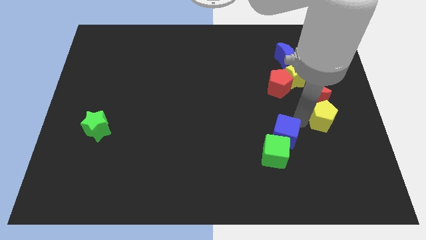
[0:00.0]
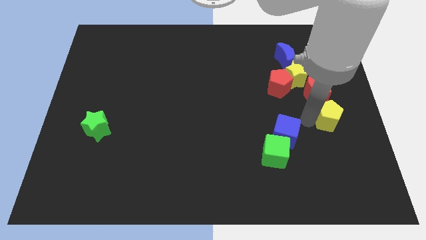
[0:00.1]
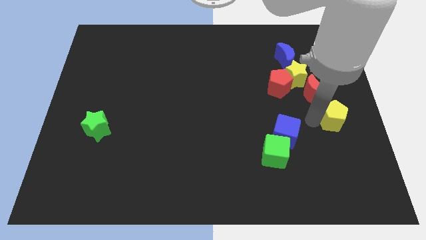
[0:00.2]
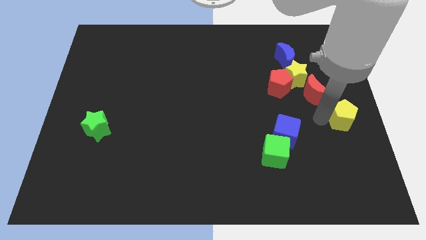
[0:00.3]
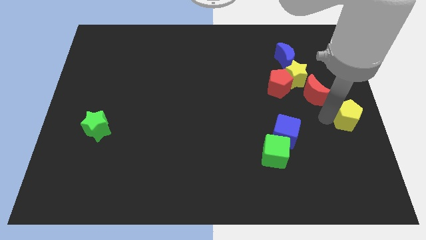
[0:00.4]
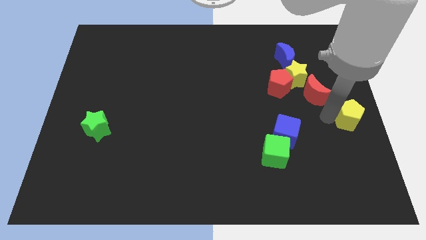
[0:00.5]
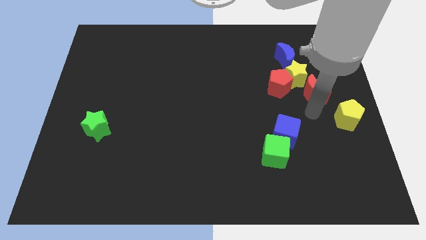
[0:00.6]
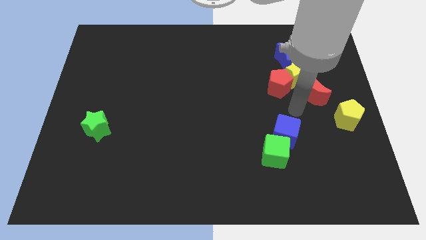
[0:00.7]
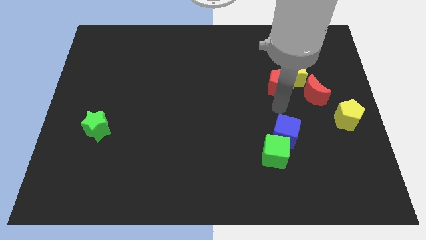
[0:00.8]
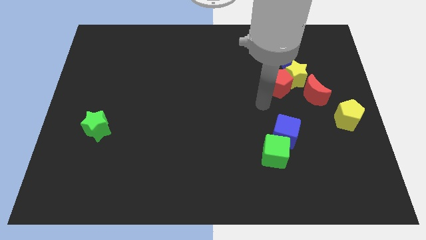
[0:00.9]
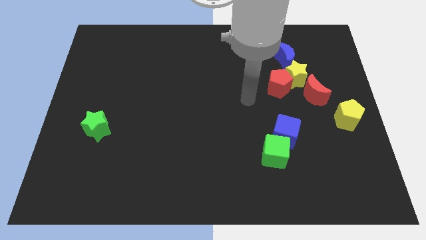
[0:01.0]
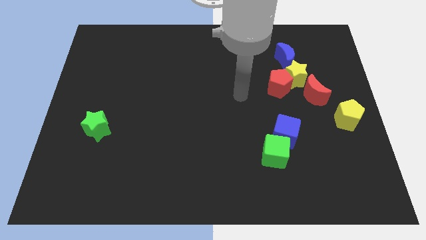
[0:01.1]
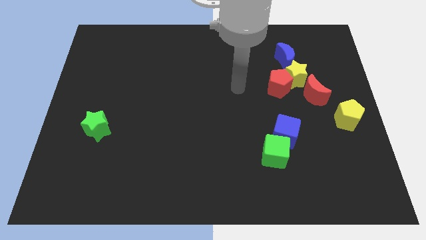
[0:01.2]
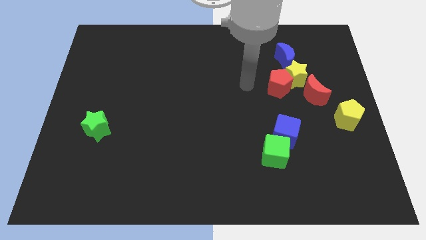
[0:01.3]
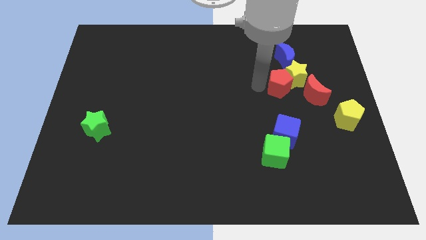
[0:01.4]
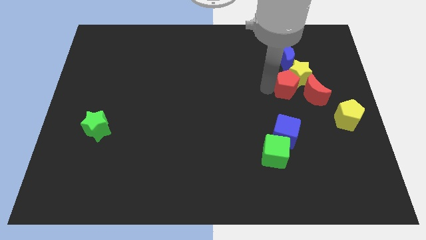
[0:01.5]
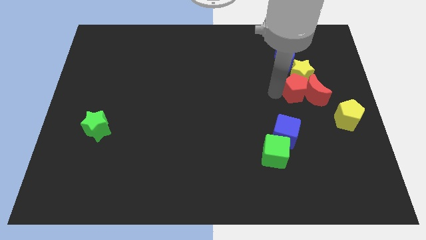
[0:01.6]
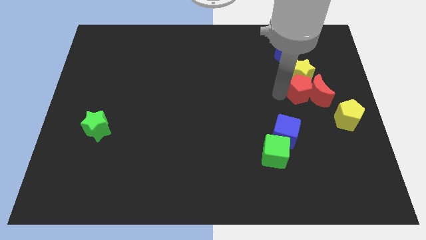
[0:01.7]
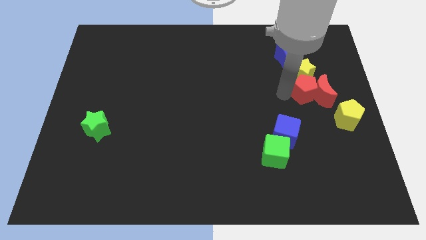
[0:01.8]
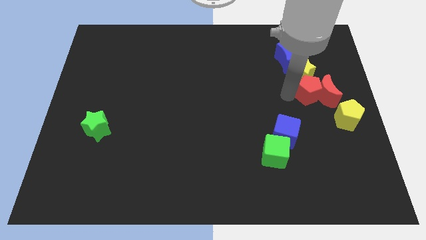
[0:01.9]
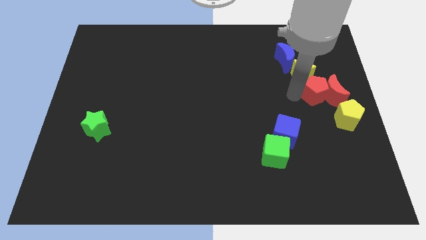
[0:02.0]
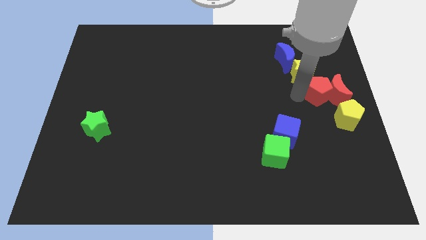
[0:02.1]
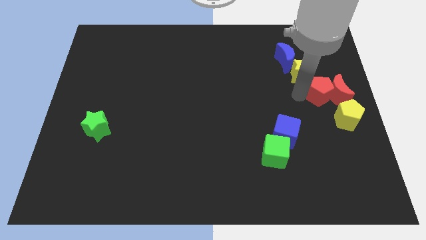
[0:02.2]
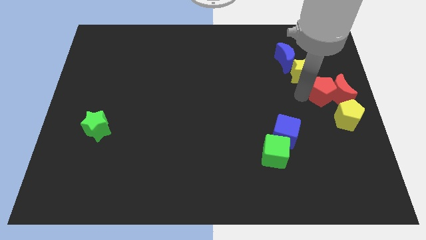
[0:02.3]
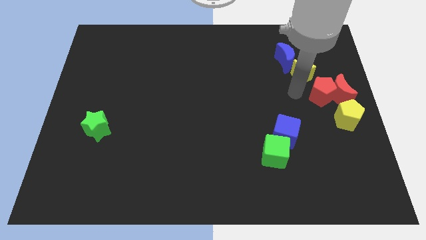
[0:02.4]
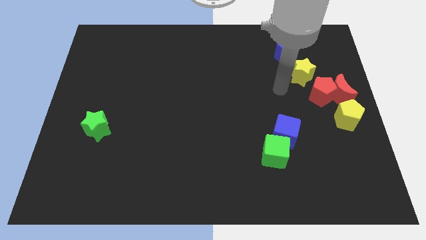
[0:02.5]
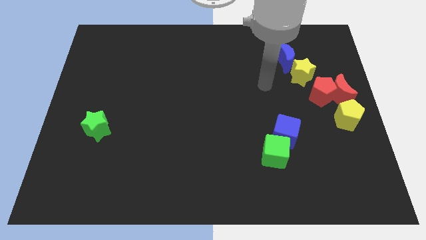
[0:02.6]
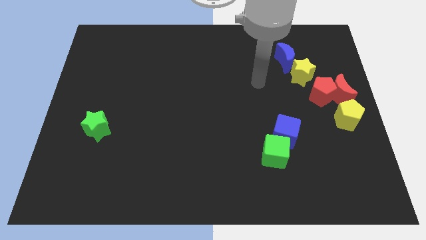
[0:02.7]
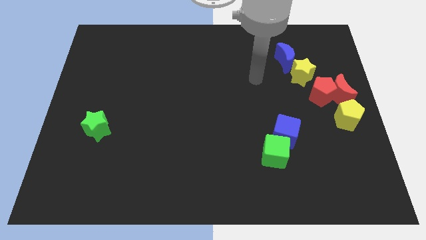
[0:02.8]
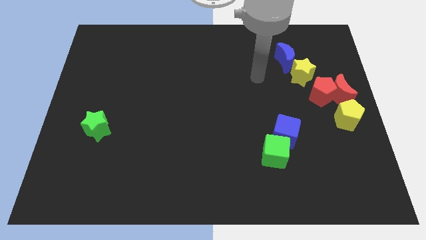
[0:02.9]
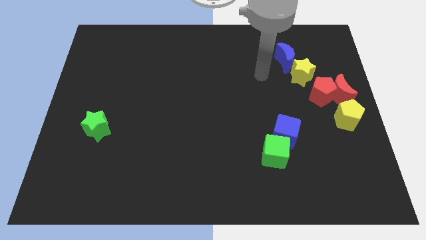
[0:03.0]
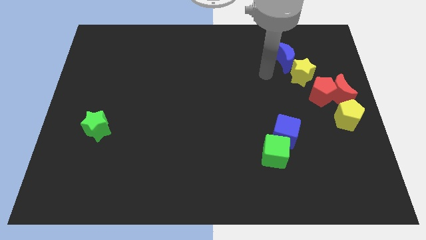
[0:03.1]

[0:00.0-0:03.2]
move the yellow pentagon and red blocks to the center right

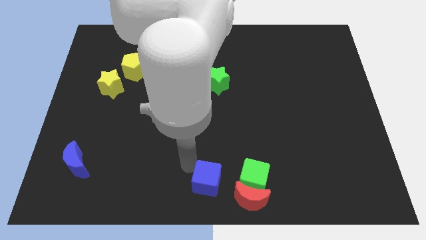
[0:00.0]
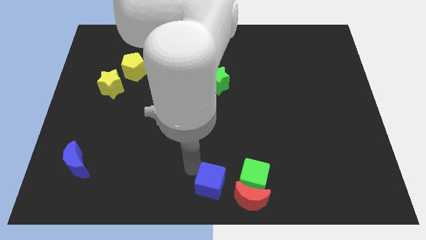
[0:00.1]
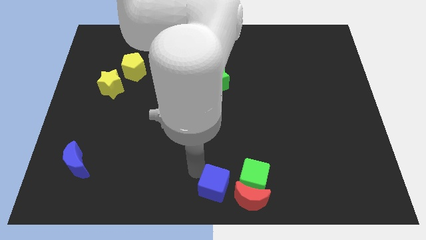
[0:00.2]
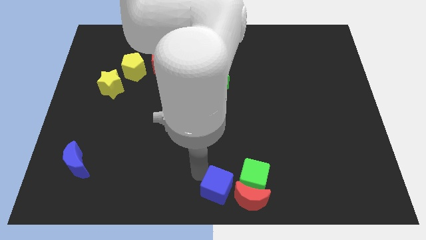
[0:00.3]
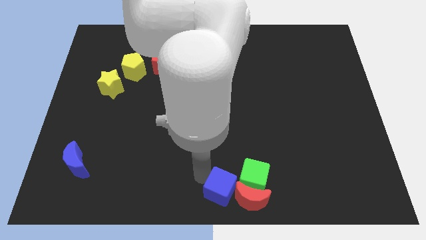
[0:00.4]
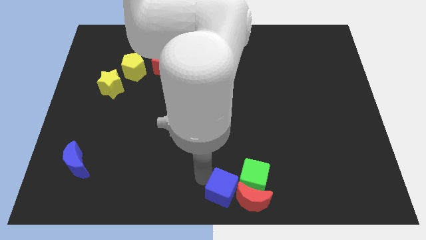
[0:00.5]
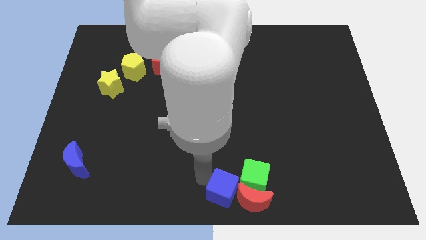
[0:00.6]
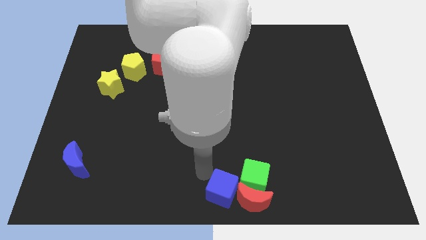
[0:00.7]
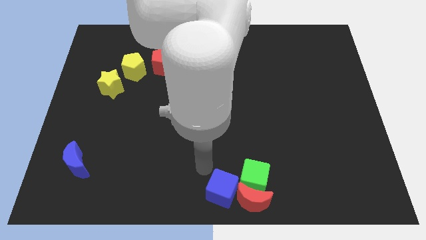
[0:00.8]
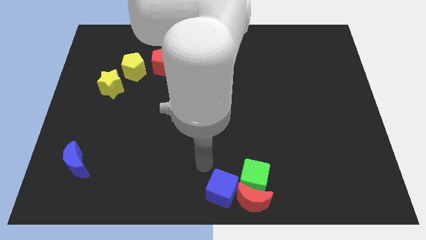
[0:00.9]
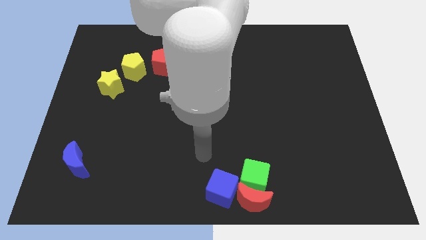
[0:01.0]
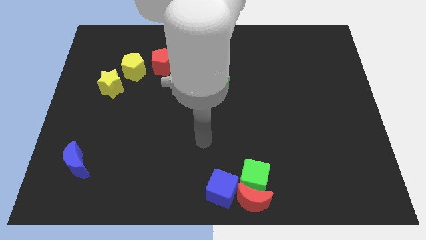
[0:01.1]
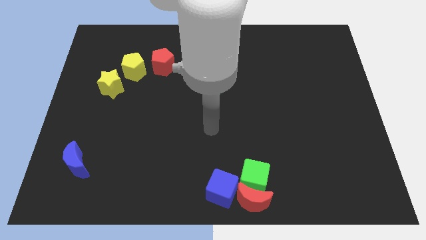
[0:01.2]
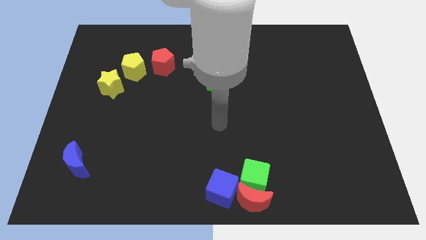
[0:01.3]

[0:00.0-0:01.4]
push the blue block into the red and green block

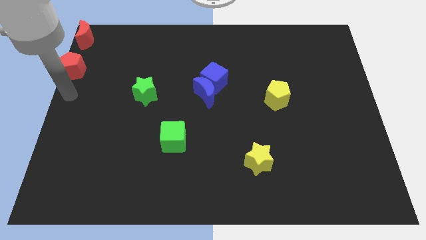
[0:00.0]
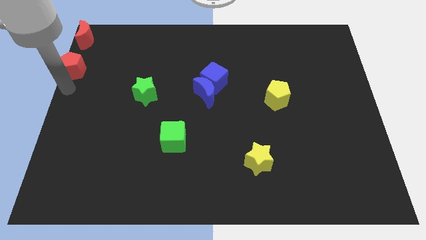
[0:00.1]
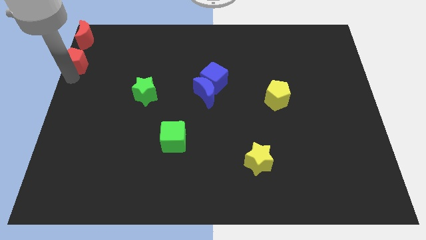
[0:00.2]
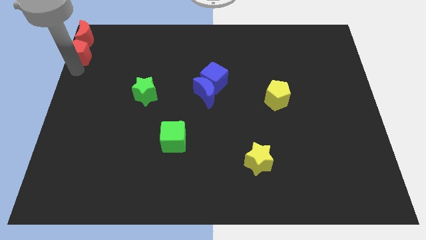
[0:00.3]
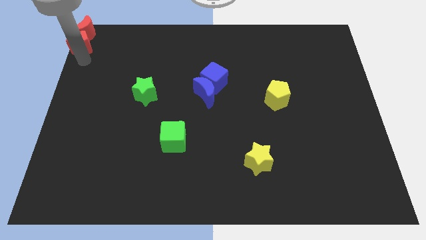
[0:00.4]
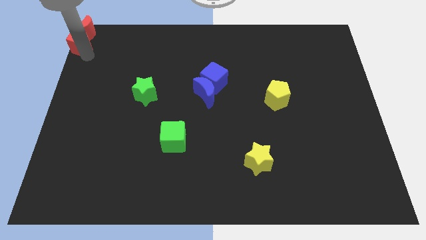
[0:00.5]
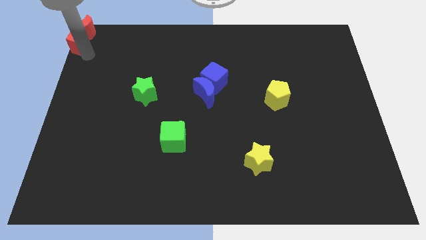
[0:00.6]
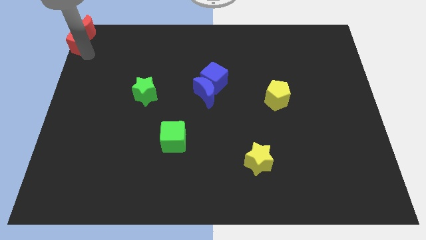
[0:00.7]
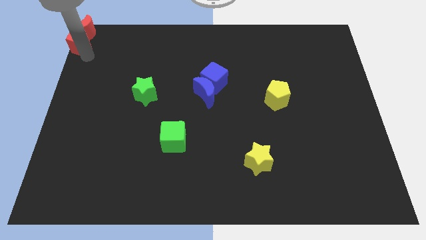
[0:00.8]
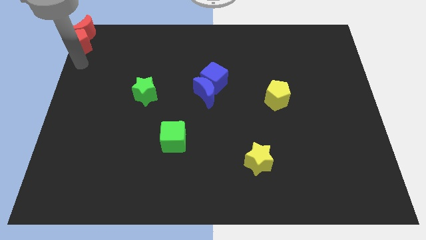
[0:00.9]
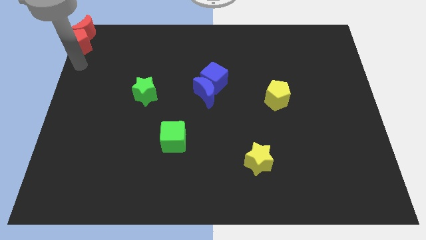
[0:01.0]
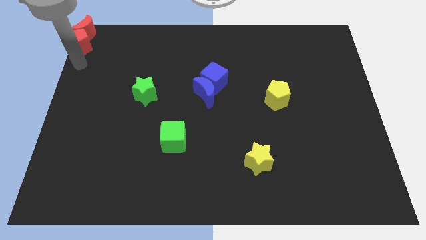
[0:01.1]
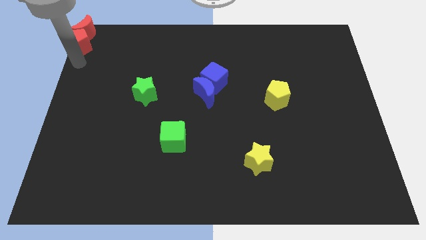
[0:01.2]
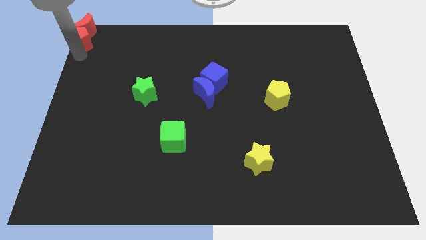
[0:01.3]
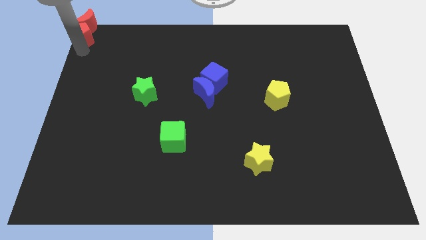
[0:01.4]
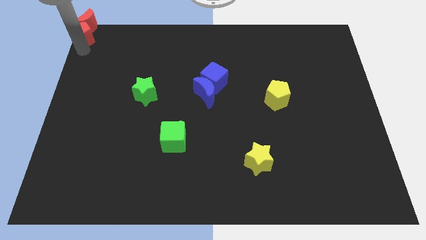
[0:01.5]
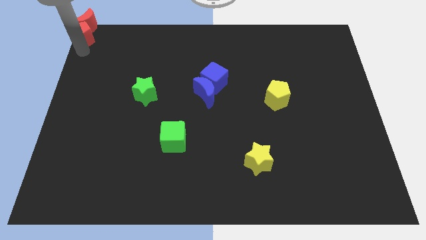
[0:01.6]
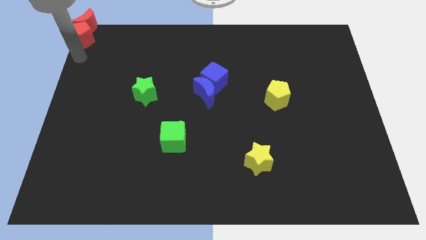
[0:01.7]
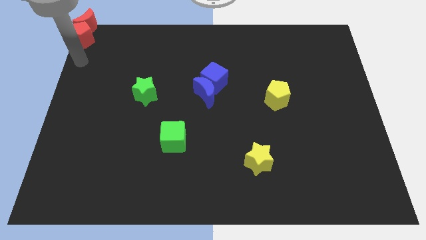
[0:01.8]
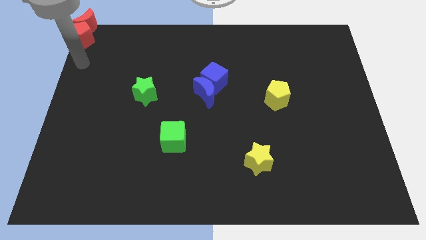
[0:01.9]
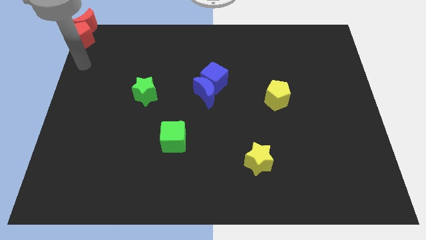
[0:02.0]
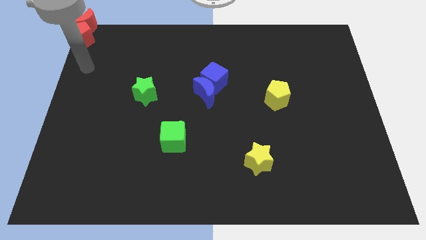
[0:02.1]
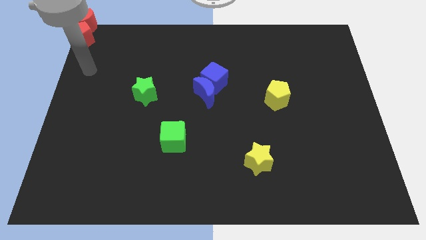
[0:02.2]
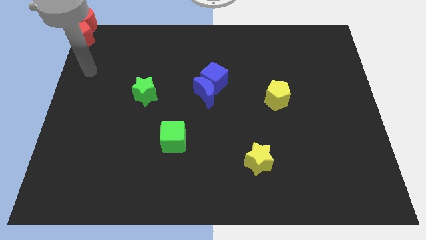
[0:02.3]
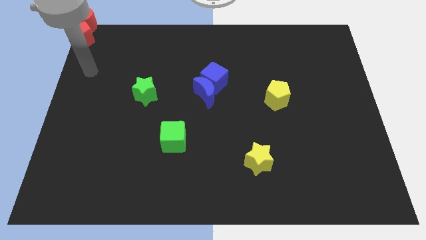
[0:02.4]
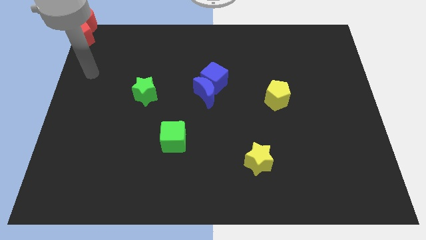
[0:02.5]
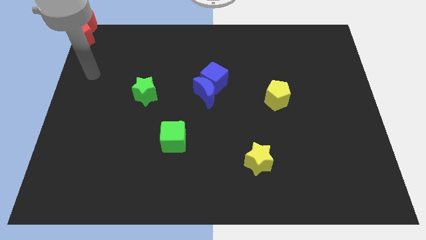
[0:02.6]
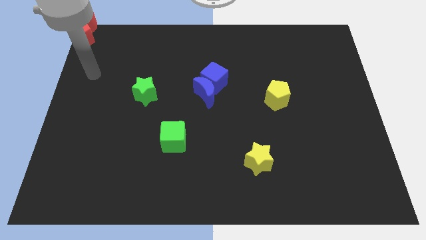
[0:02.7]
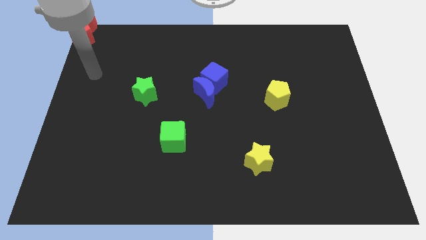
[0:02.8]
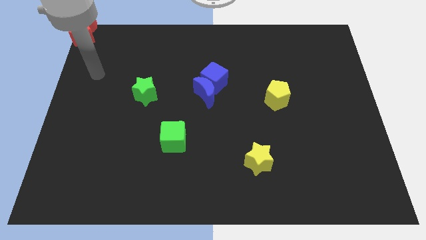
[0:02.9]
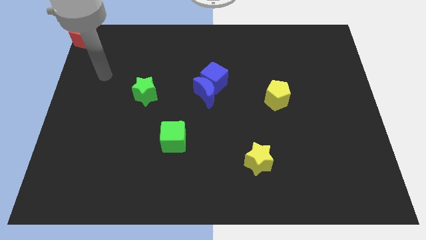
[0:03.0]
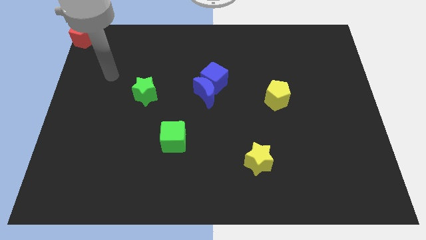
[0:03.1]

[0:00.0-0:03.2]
move the red pentagon into the red crescent

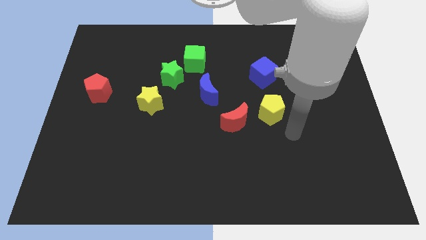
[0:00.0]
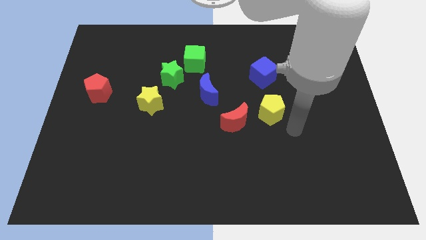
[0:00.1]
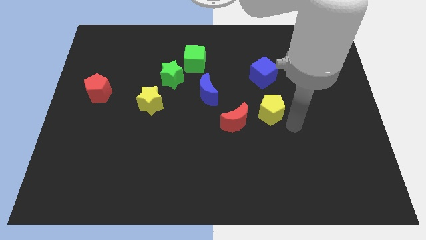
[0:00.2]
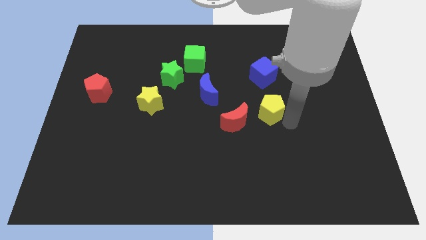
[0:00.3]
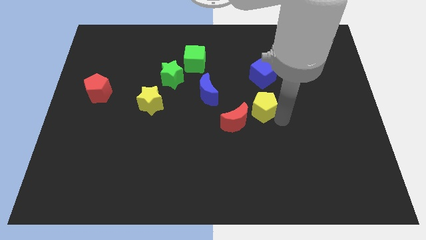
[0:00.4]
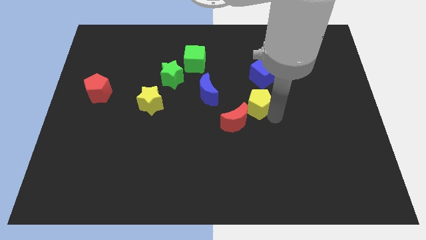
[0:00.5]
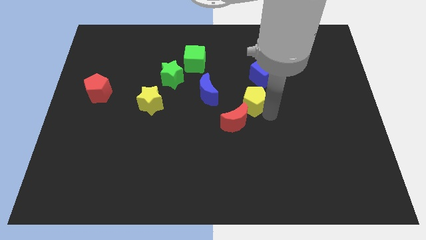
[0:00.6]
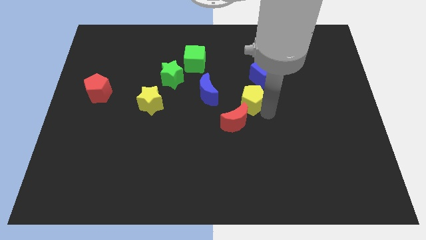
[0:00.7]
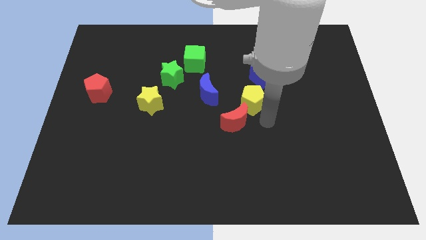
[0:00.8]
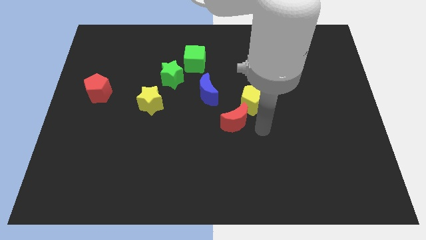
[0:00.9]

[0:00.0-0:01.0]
place the yellow pentagon diagonal to the blue cube

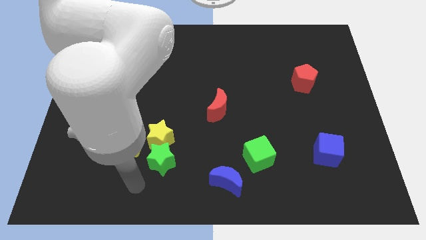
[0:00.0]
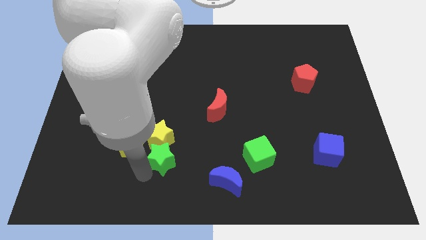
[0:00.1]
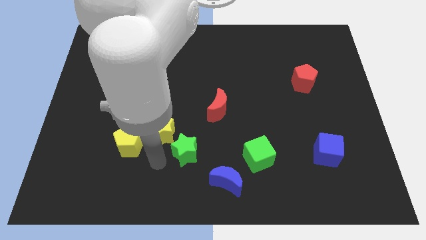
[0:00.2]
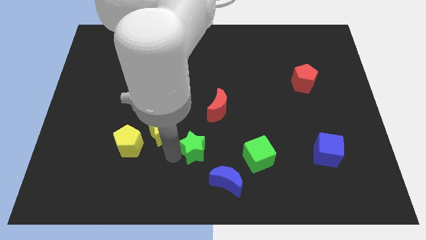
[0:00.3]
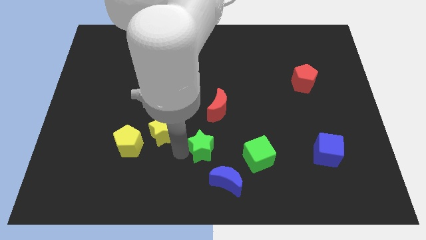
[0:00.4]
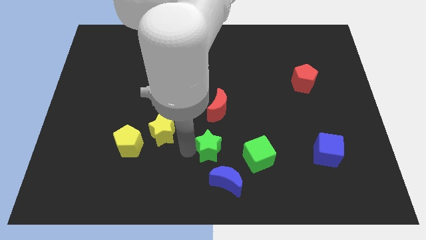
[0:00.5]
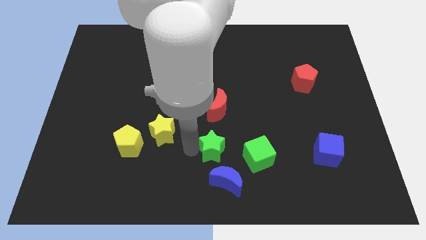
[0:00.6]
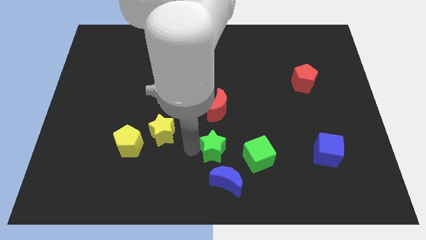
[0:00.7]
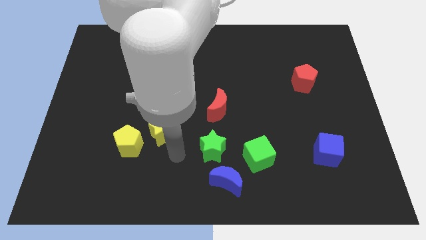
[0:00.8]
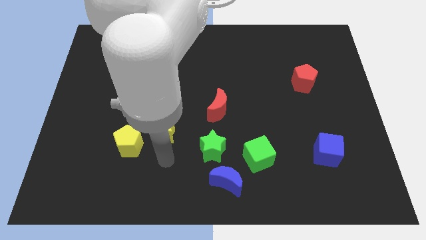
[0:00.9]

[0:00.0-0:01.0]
move the green star to the top of the blue crescent
